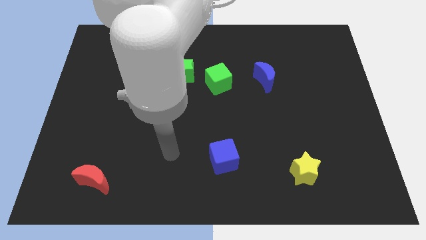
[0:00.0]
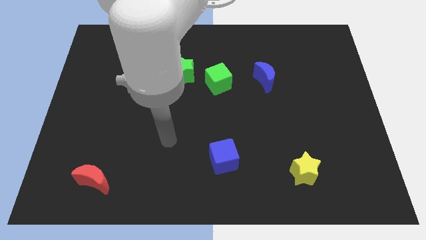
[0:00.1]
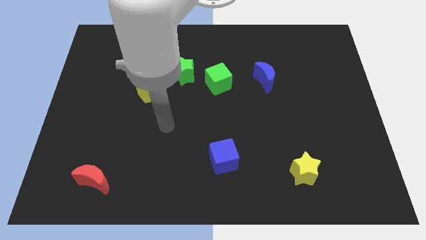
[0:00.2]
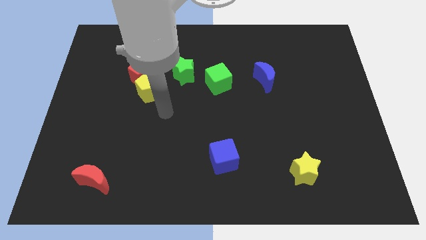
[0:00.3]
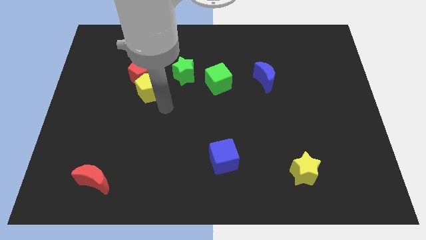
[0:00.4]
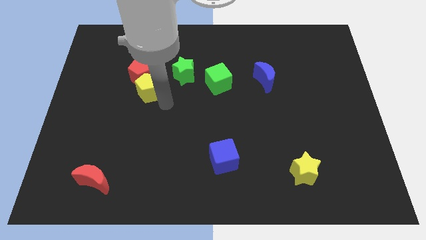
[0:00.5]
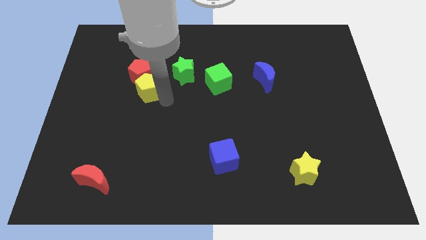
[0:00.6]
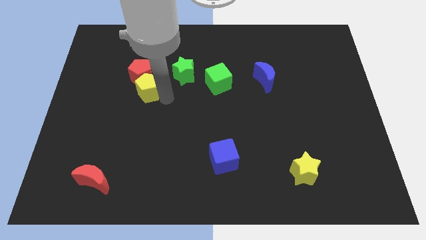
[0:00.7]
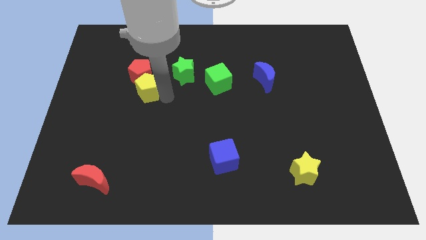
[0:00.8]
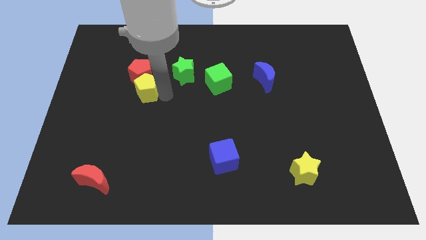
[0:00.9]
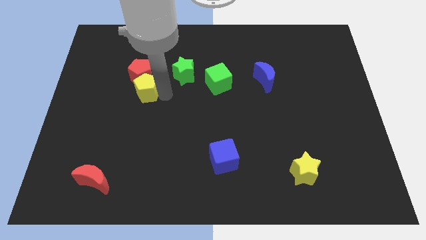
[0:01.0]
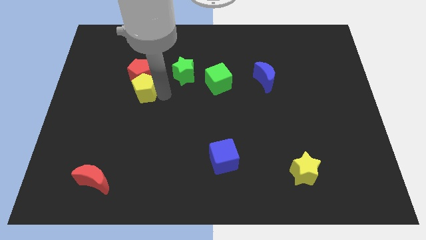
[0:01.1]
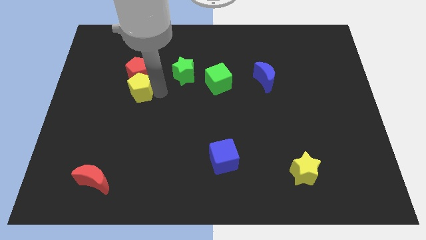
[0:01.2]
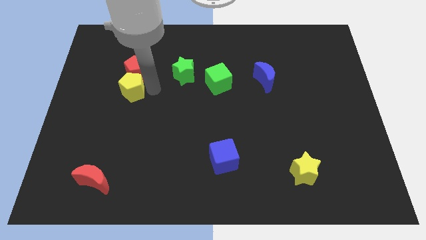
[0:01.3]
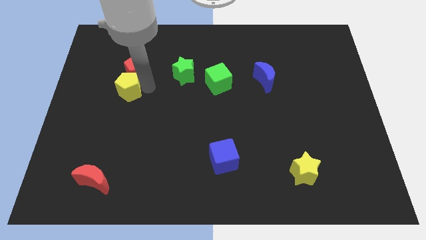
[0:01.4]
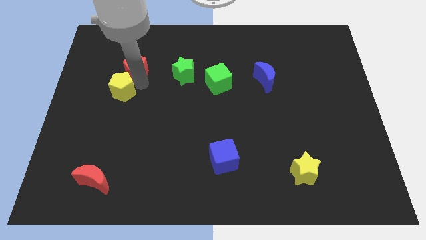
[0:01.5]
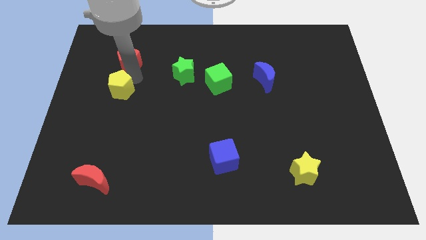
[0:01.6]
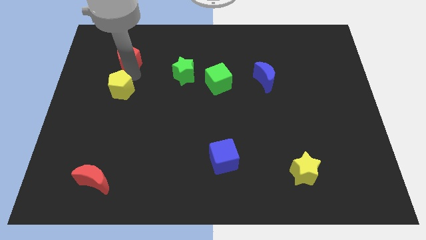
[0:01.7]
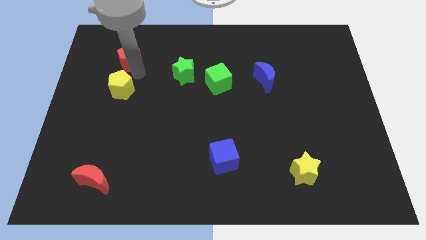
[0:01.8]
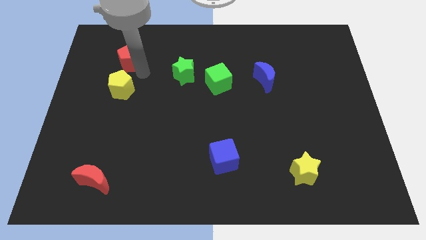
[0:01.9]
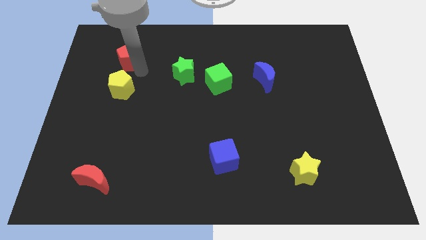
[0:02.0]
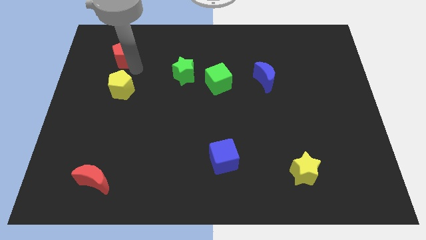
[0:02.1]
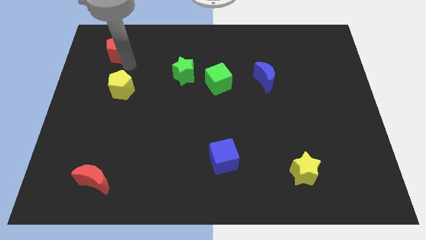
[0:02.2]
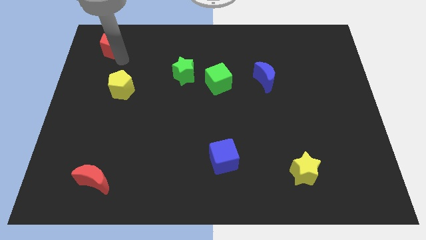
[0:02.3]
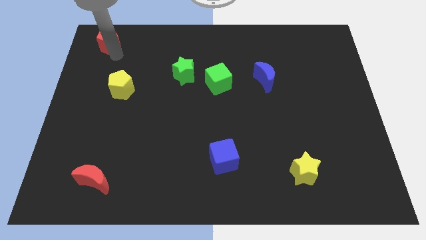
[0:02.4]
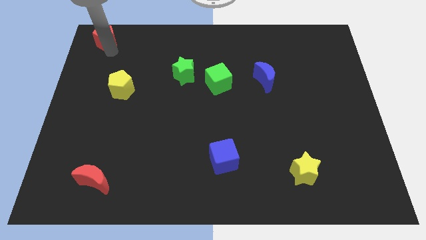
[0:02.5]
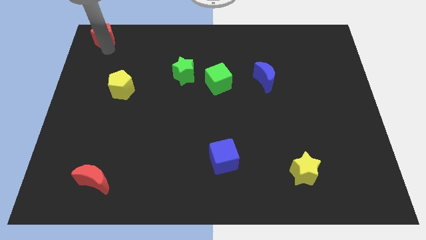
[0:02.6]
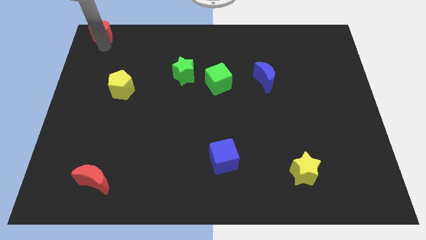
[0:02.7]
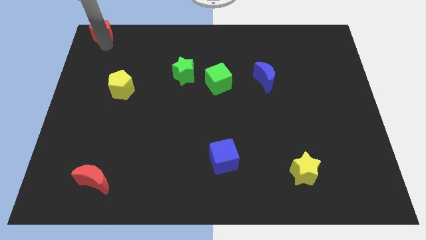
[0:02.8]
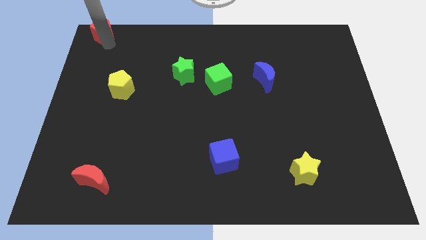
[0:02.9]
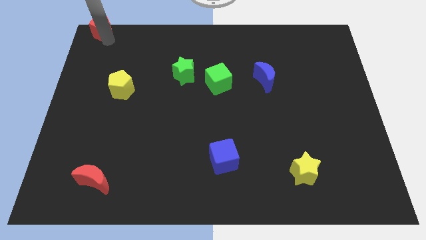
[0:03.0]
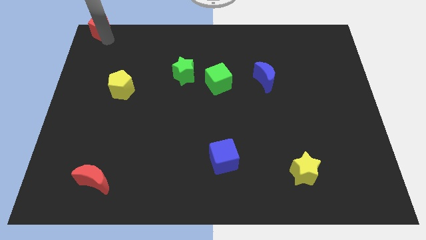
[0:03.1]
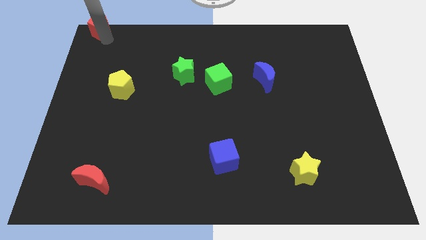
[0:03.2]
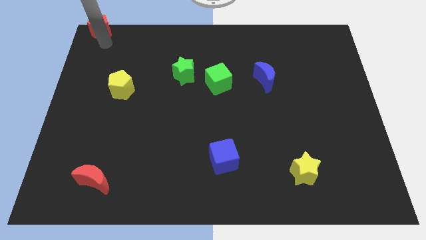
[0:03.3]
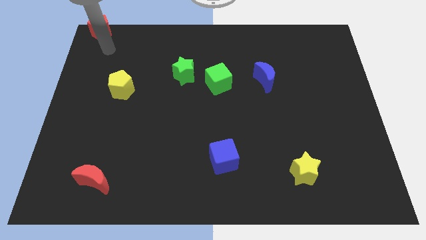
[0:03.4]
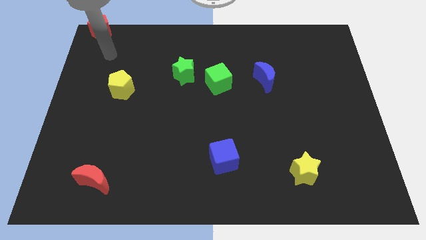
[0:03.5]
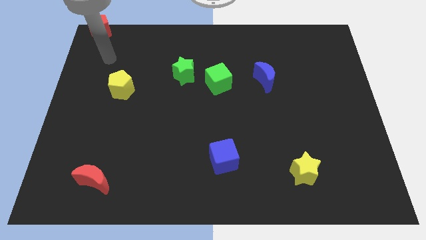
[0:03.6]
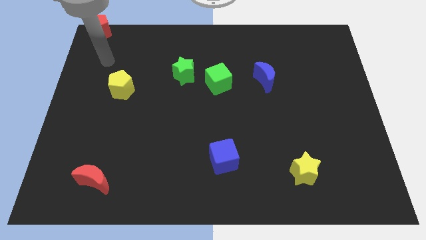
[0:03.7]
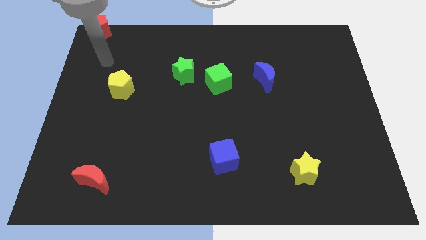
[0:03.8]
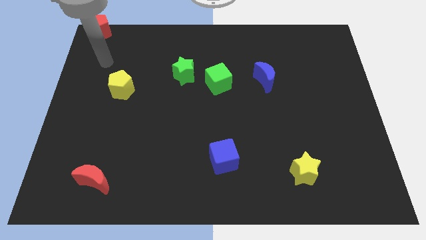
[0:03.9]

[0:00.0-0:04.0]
move the red pentagon to the top left corner of the board

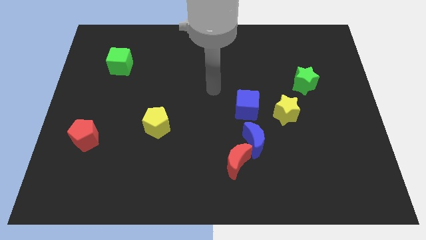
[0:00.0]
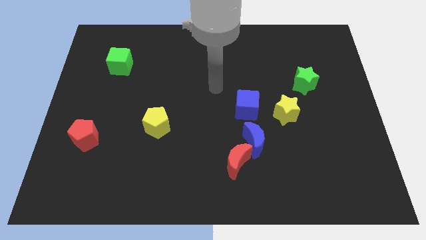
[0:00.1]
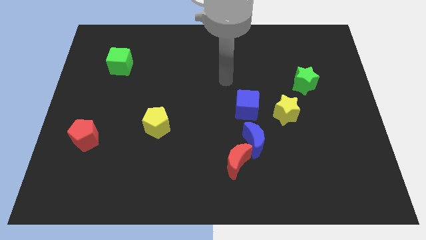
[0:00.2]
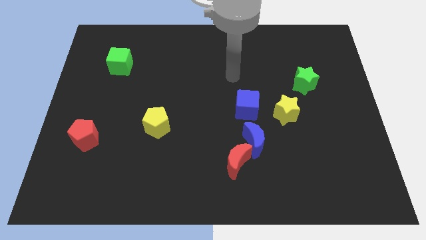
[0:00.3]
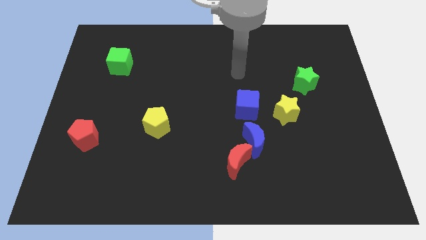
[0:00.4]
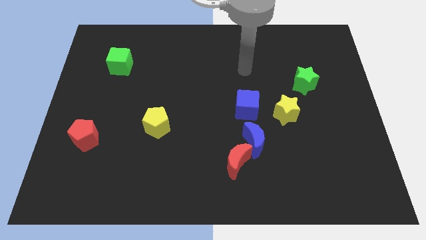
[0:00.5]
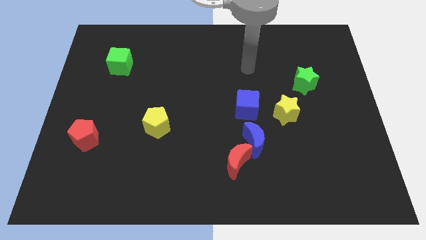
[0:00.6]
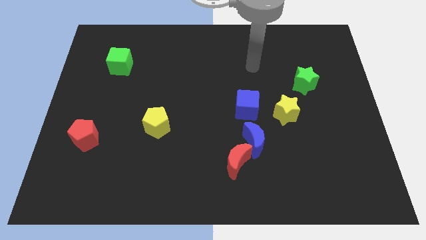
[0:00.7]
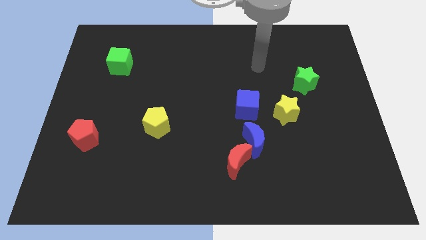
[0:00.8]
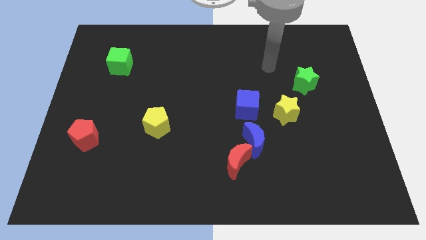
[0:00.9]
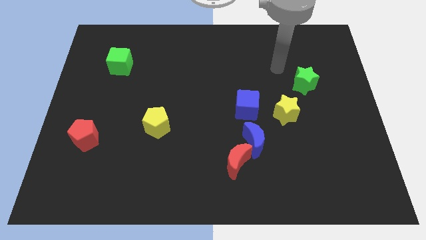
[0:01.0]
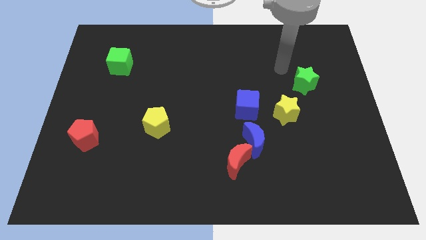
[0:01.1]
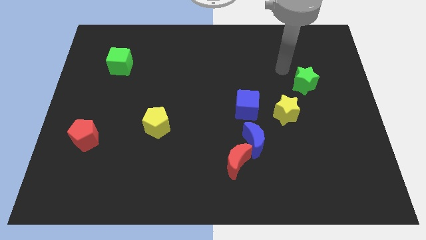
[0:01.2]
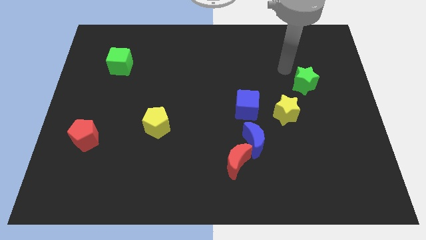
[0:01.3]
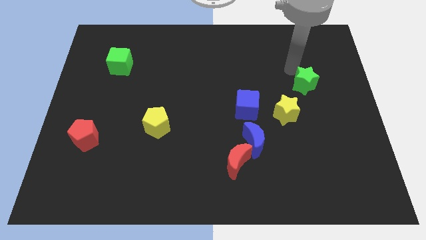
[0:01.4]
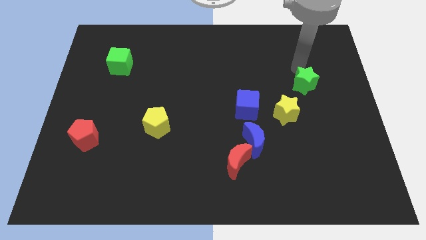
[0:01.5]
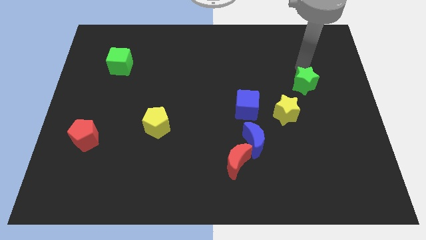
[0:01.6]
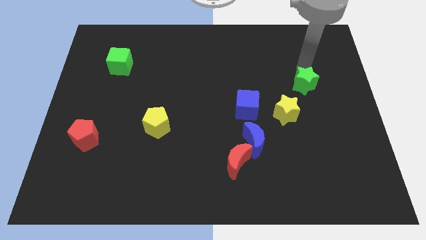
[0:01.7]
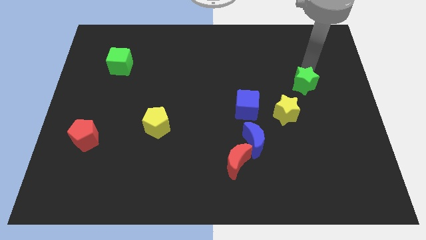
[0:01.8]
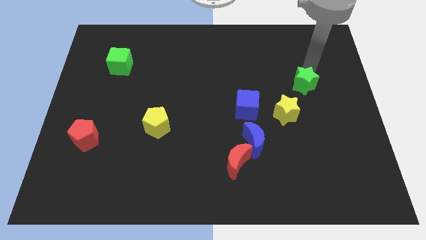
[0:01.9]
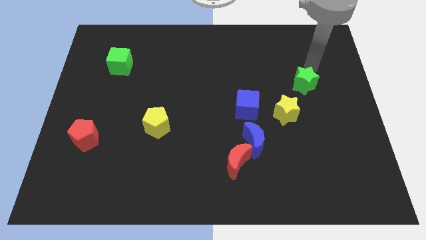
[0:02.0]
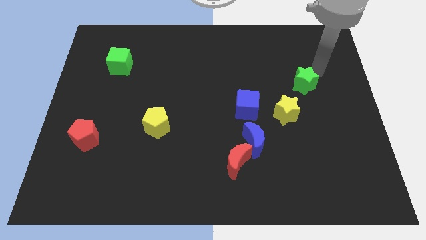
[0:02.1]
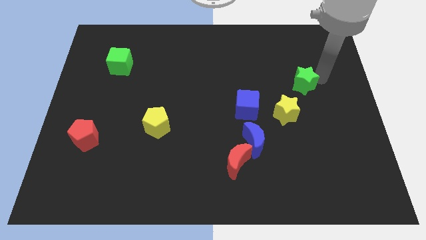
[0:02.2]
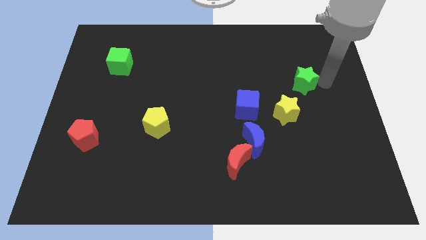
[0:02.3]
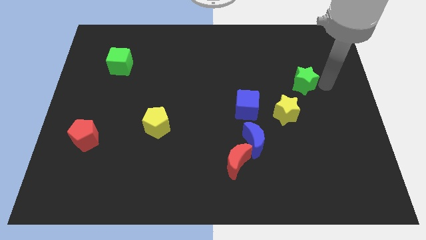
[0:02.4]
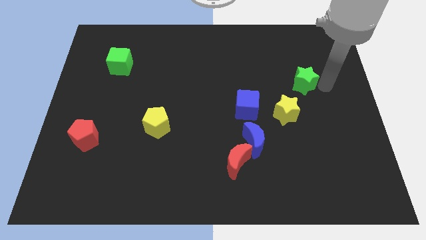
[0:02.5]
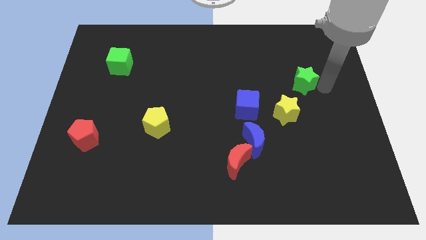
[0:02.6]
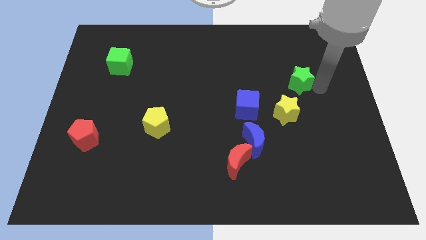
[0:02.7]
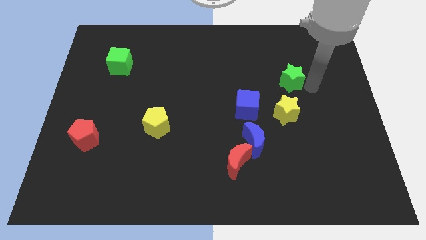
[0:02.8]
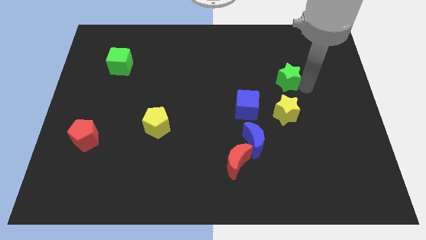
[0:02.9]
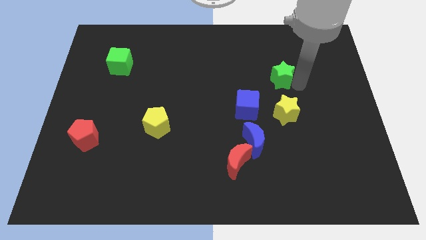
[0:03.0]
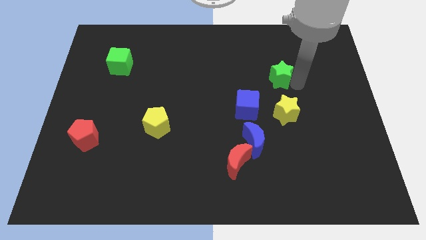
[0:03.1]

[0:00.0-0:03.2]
move the green star to the top side of the yellow star

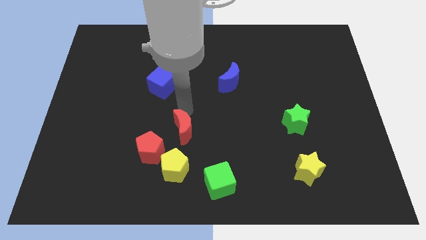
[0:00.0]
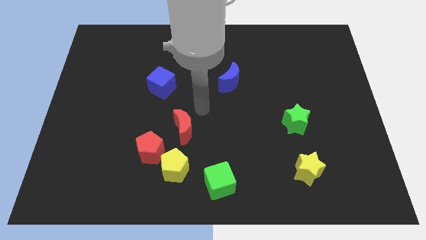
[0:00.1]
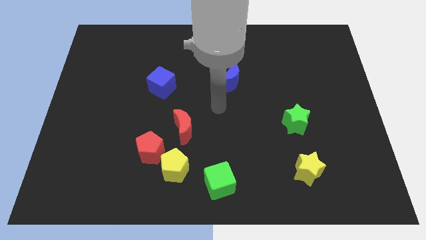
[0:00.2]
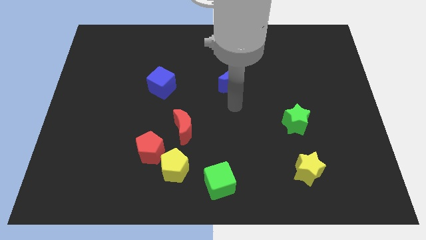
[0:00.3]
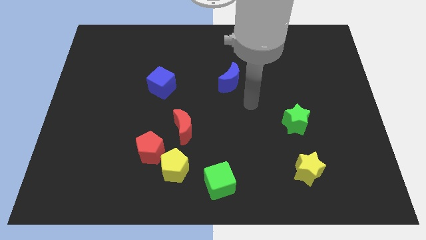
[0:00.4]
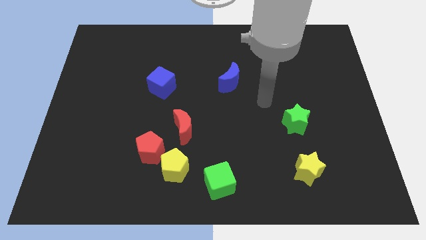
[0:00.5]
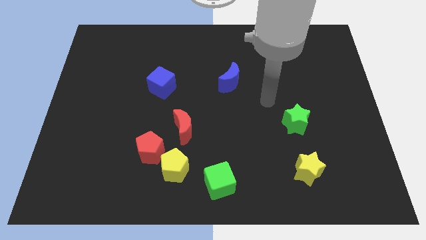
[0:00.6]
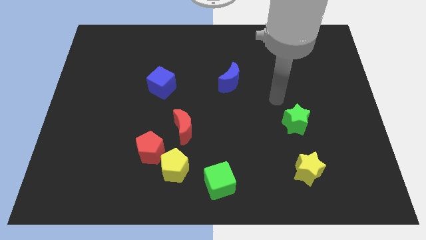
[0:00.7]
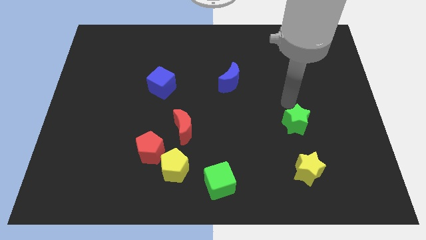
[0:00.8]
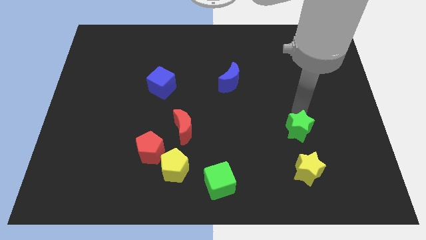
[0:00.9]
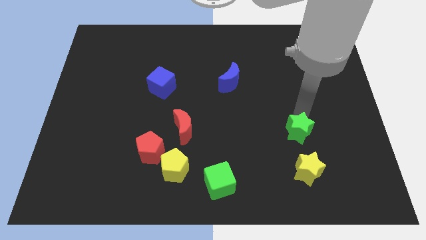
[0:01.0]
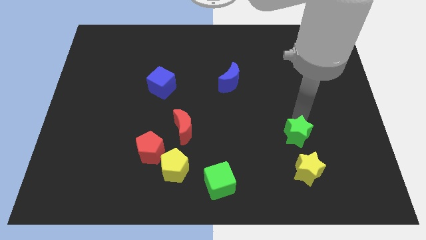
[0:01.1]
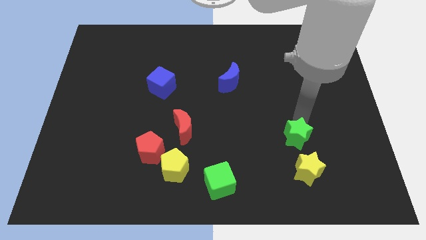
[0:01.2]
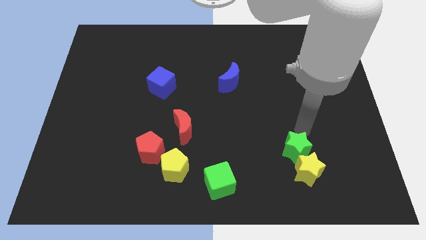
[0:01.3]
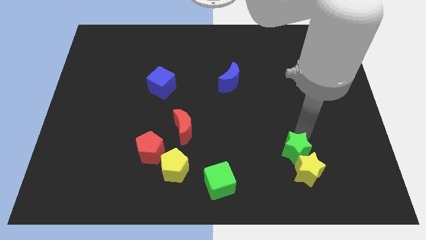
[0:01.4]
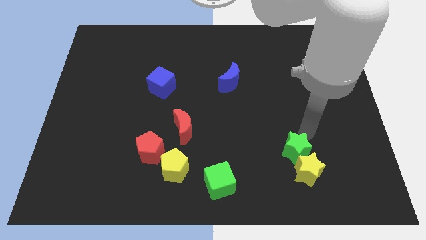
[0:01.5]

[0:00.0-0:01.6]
push the green star into yellow star on top
